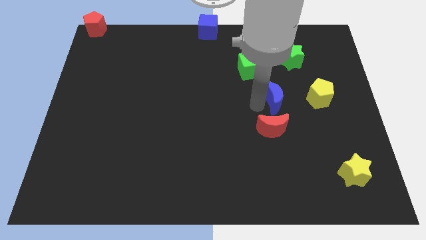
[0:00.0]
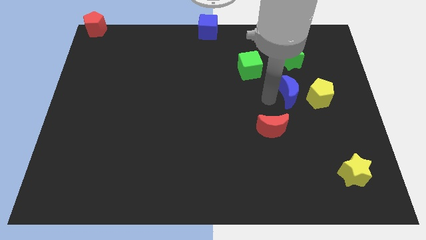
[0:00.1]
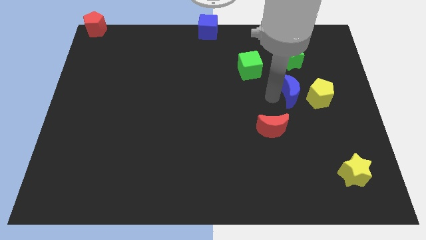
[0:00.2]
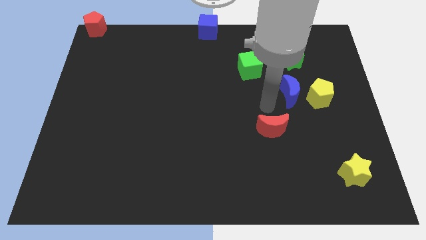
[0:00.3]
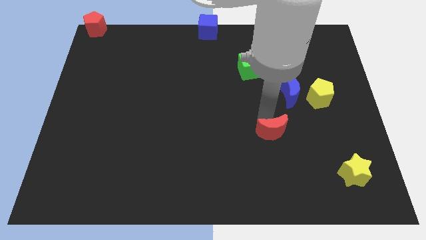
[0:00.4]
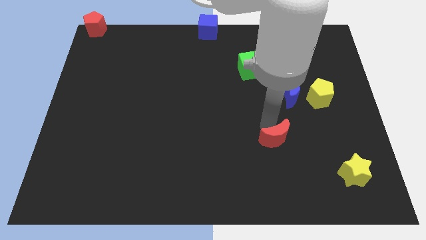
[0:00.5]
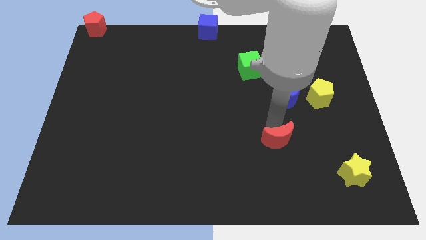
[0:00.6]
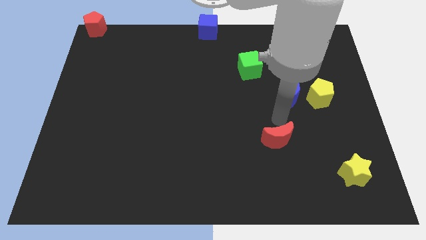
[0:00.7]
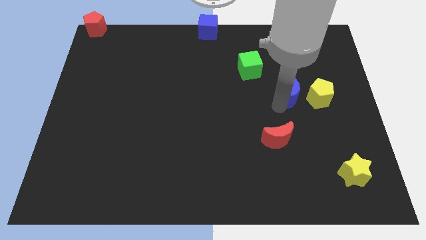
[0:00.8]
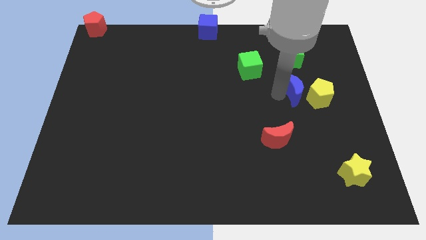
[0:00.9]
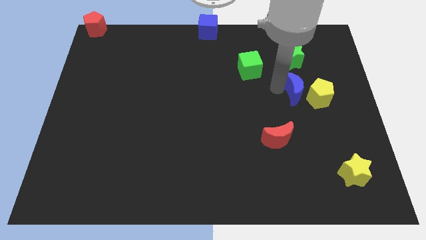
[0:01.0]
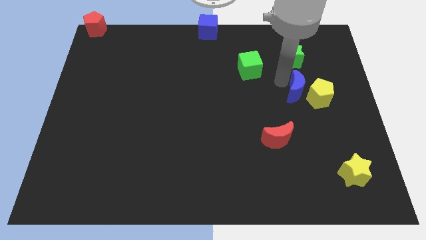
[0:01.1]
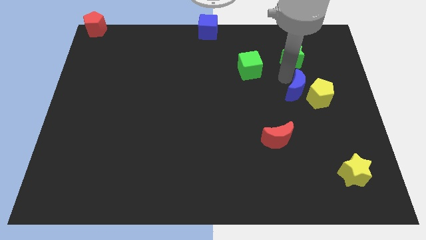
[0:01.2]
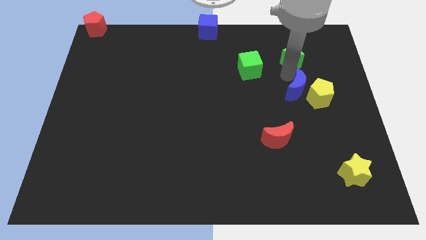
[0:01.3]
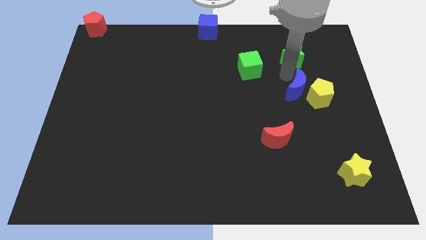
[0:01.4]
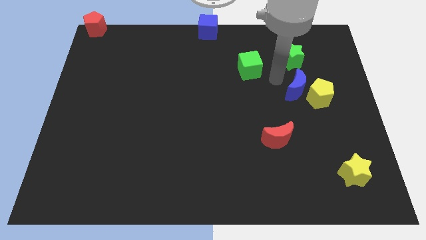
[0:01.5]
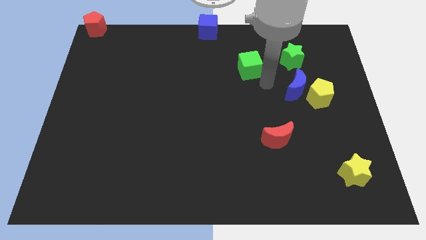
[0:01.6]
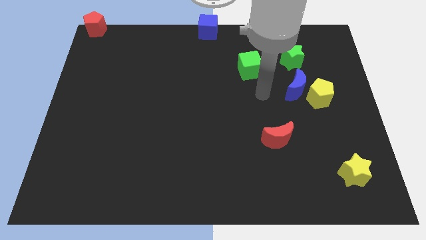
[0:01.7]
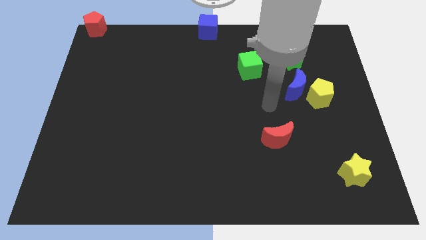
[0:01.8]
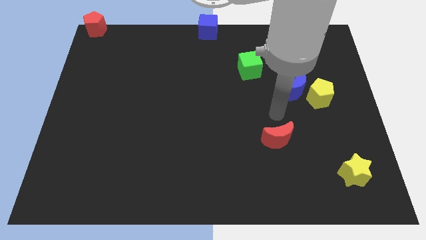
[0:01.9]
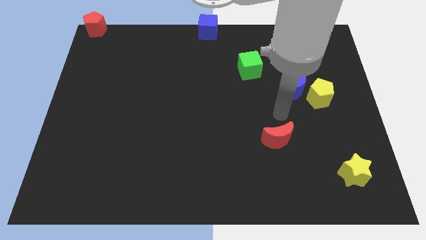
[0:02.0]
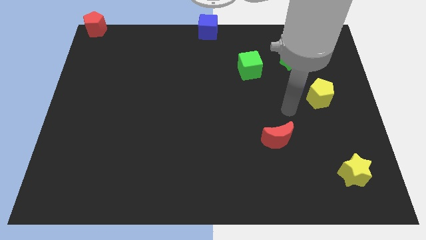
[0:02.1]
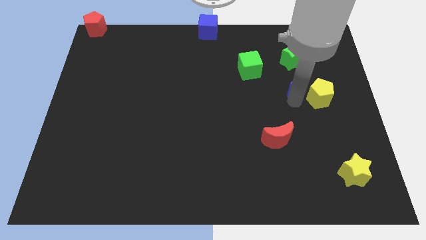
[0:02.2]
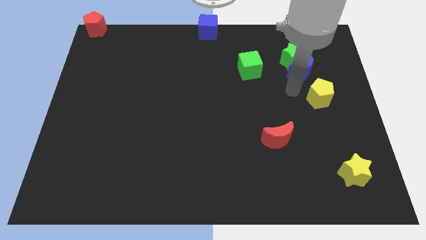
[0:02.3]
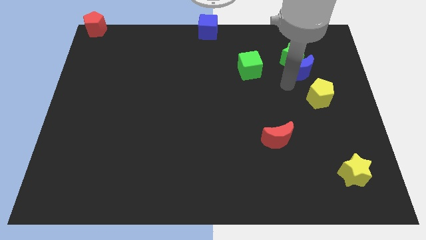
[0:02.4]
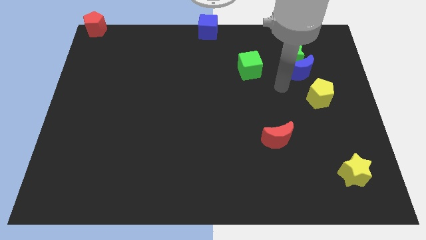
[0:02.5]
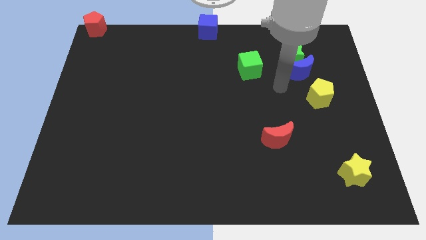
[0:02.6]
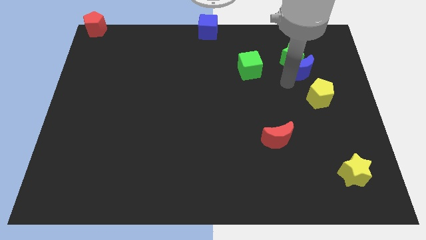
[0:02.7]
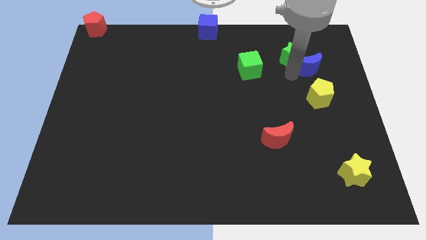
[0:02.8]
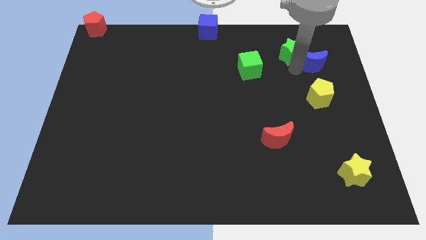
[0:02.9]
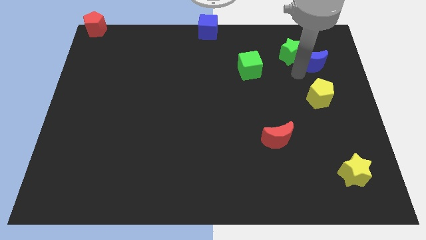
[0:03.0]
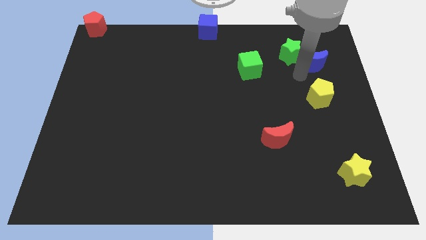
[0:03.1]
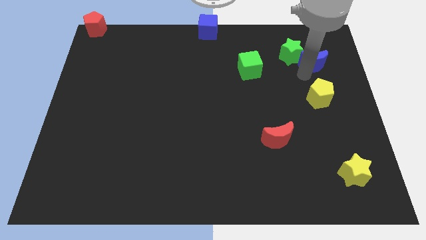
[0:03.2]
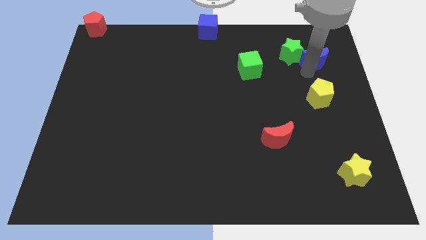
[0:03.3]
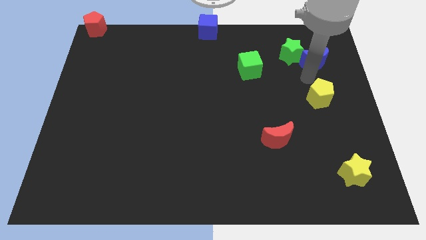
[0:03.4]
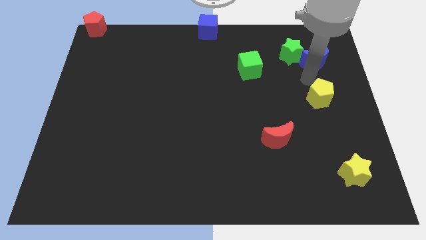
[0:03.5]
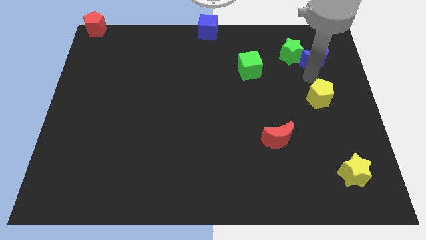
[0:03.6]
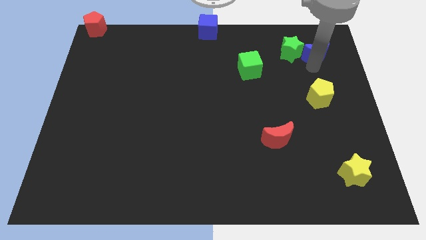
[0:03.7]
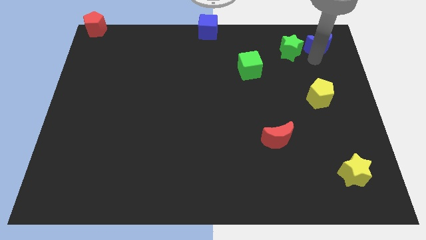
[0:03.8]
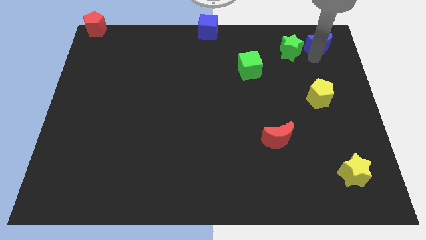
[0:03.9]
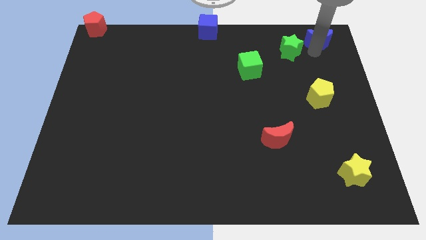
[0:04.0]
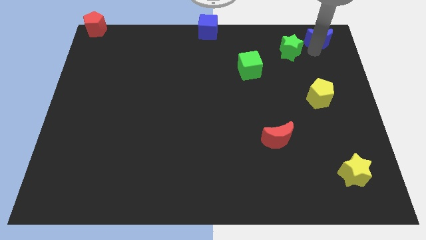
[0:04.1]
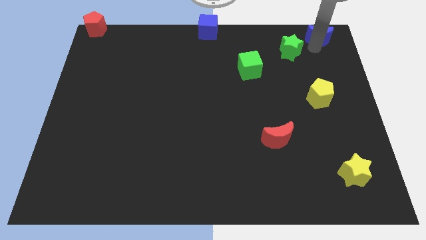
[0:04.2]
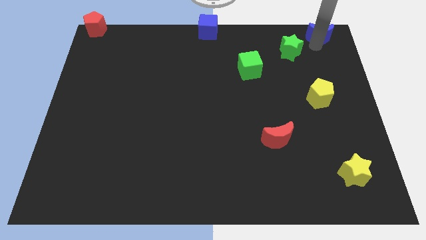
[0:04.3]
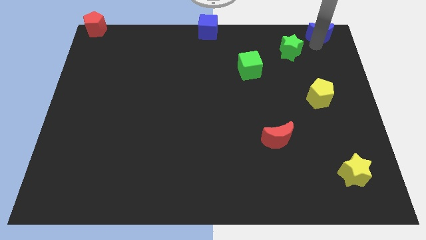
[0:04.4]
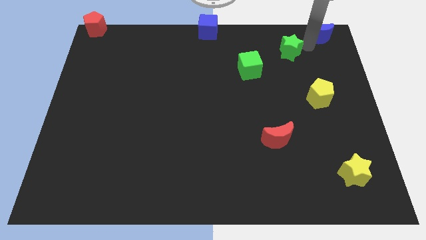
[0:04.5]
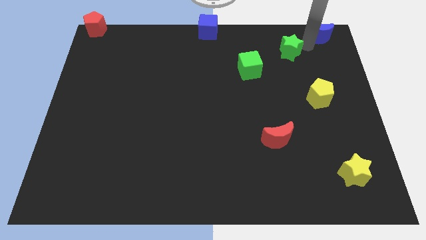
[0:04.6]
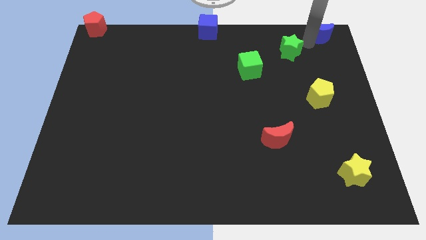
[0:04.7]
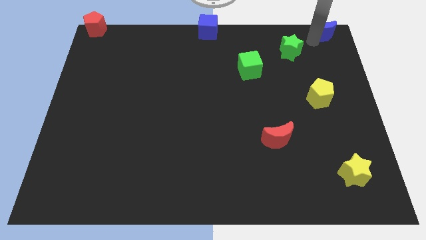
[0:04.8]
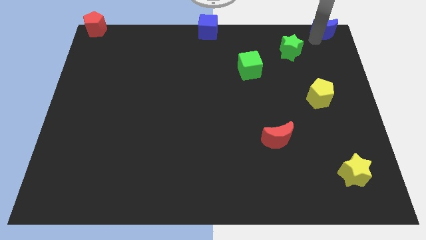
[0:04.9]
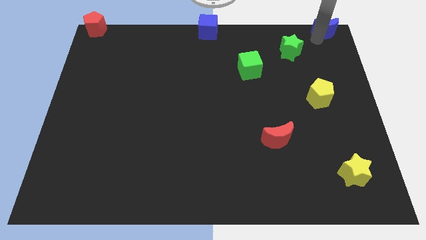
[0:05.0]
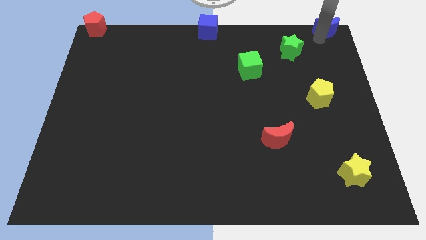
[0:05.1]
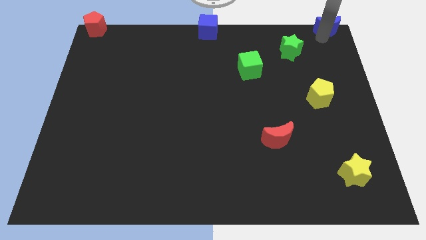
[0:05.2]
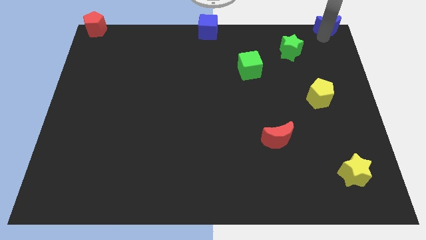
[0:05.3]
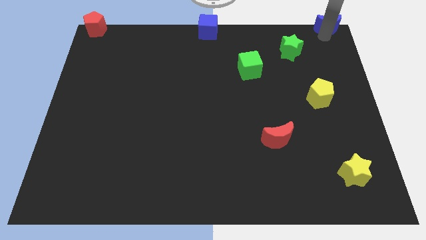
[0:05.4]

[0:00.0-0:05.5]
place the blue crescent at the top right corner

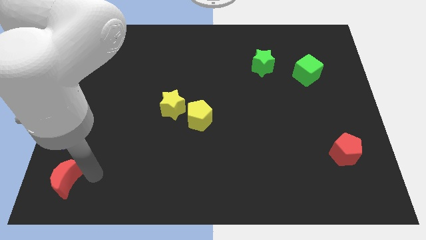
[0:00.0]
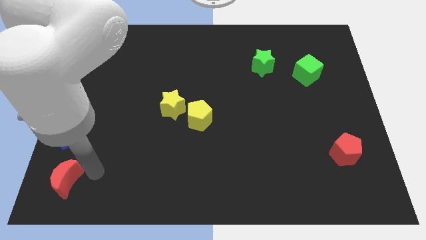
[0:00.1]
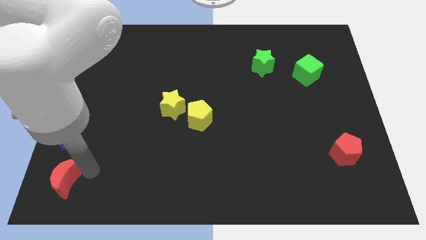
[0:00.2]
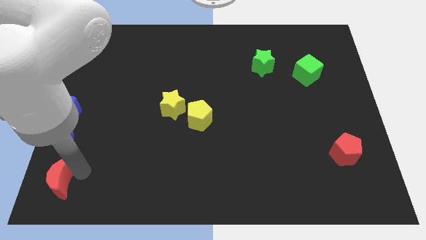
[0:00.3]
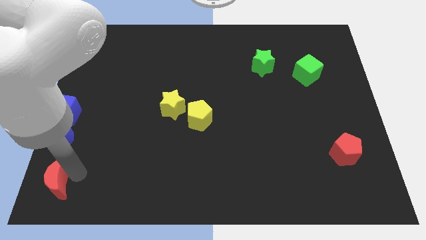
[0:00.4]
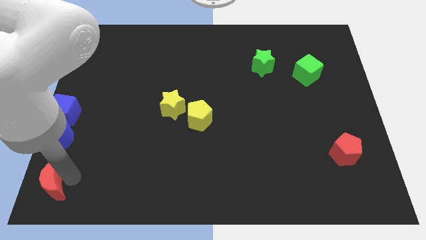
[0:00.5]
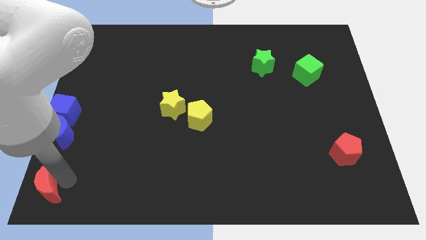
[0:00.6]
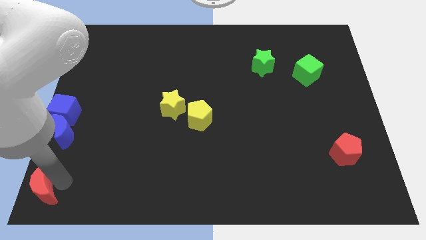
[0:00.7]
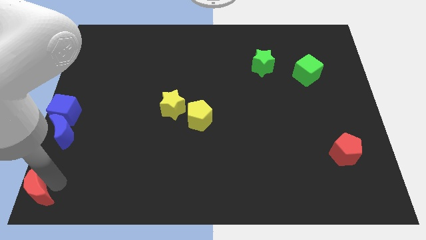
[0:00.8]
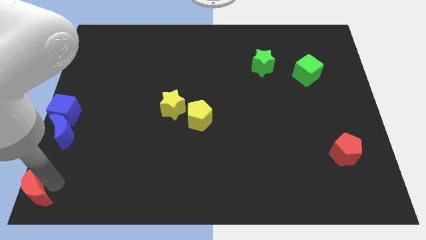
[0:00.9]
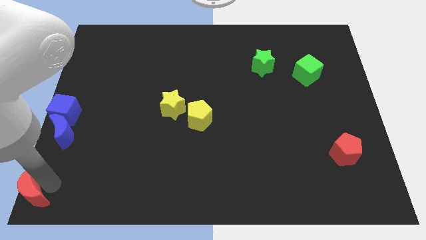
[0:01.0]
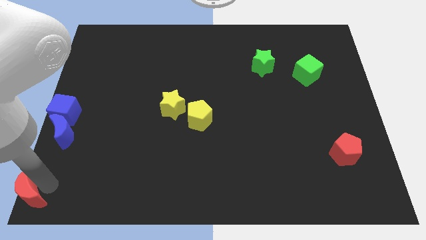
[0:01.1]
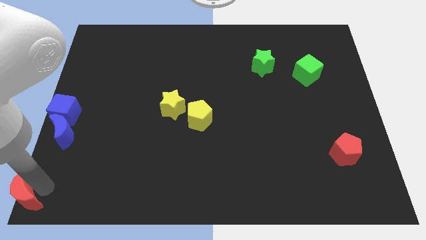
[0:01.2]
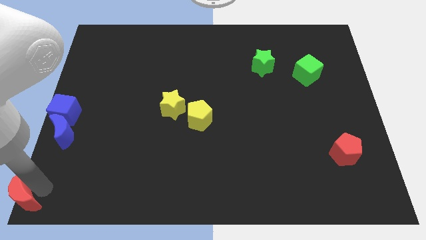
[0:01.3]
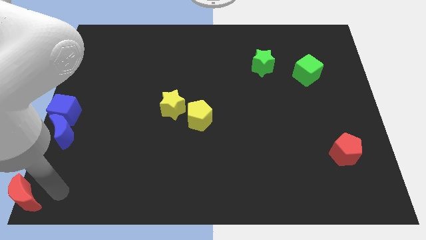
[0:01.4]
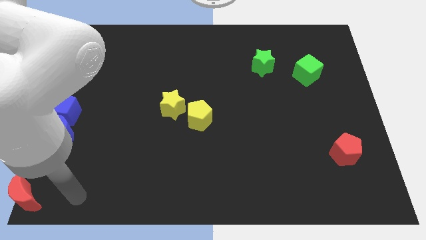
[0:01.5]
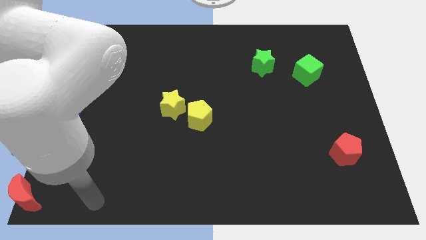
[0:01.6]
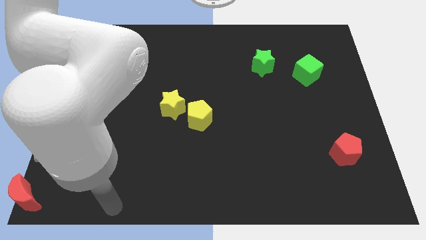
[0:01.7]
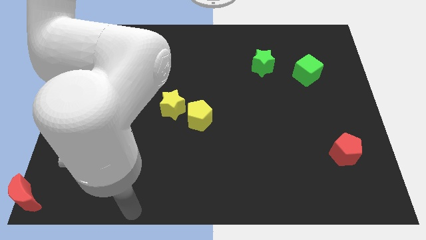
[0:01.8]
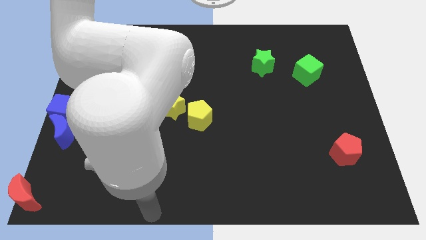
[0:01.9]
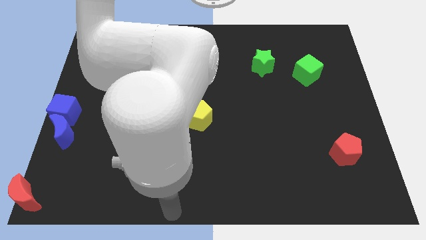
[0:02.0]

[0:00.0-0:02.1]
slide red moon to the bottom left

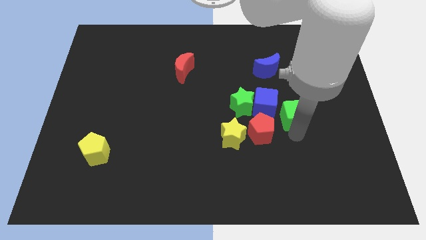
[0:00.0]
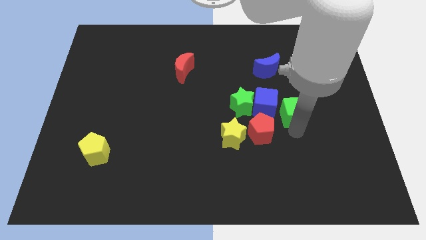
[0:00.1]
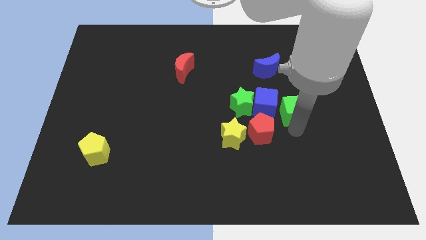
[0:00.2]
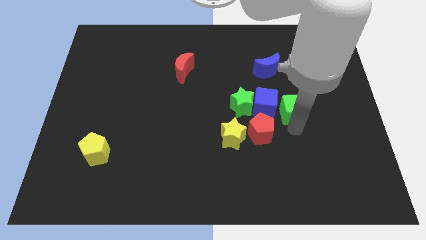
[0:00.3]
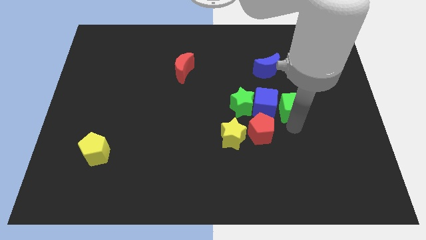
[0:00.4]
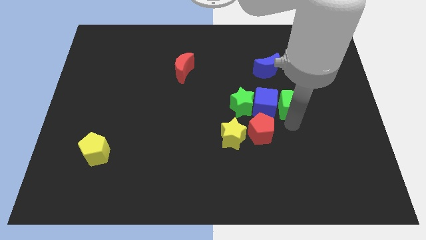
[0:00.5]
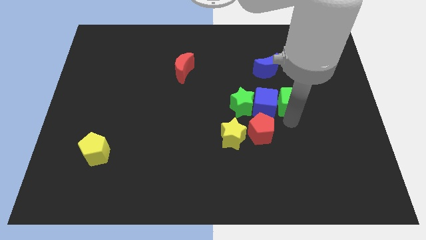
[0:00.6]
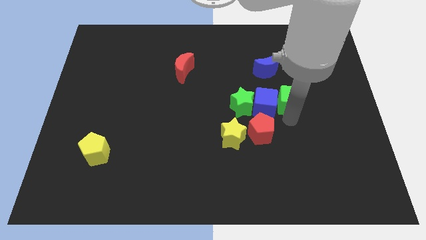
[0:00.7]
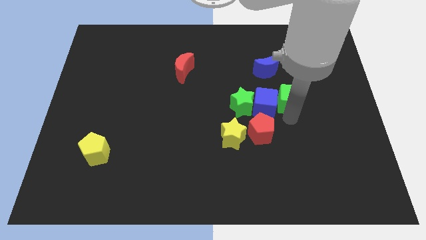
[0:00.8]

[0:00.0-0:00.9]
place green cube right to blue cube

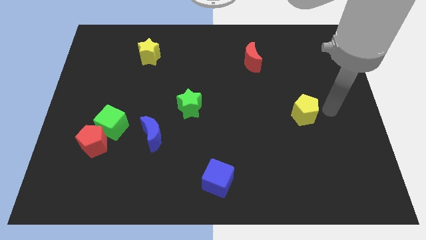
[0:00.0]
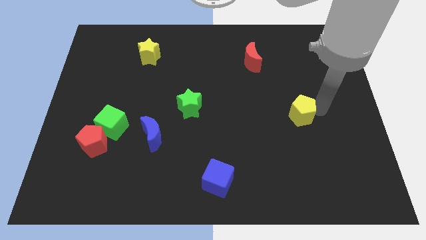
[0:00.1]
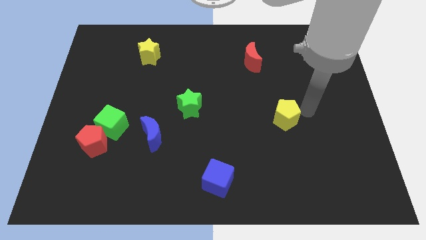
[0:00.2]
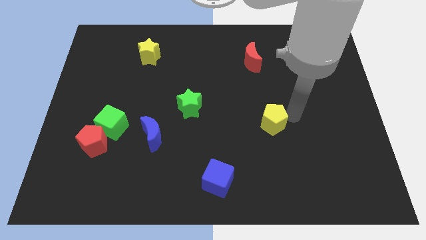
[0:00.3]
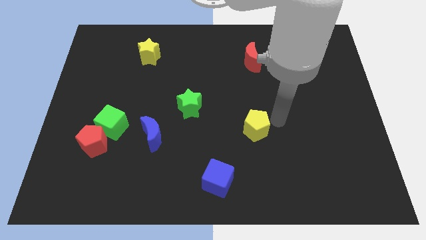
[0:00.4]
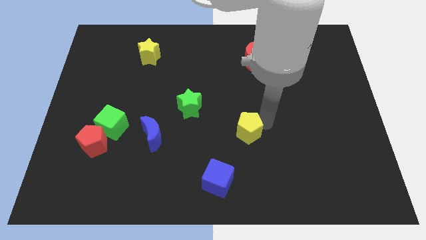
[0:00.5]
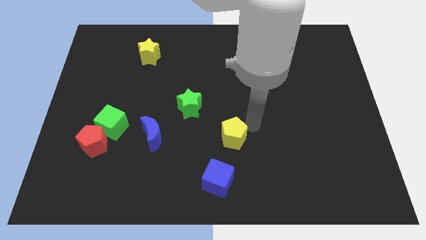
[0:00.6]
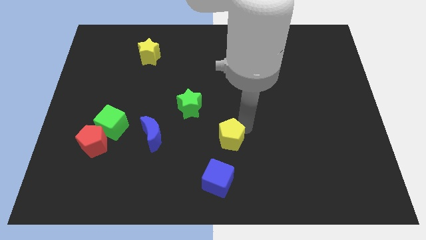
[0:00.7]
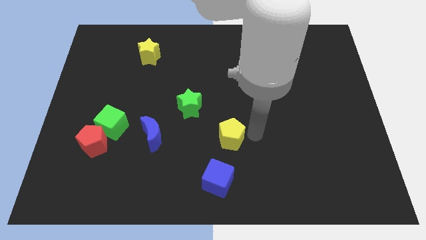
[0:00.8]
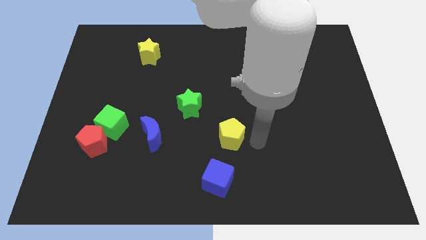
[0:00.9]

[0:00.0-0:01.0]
place the yellow pentagon parallel to blue crescent
